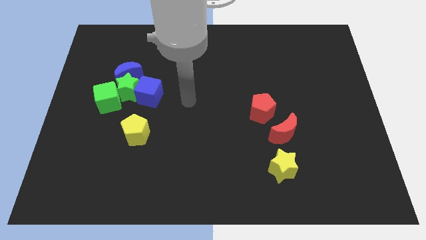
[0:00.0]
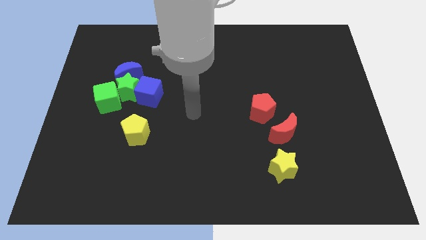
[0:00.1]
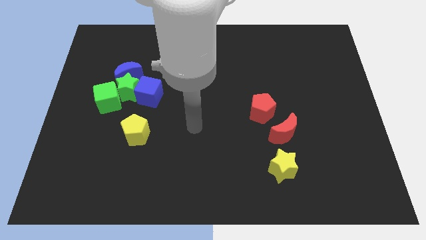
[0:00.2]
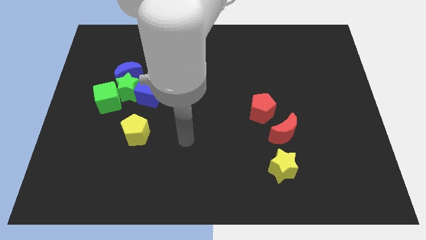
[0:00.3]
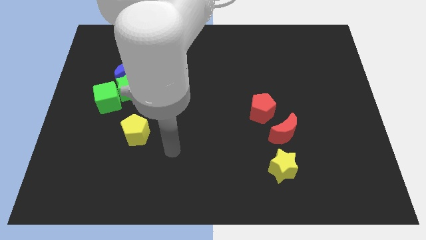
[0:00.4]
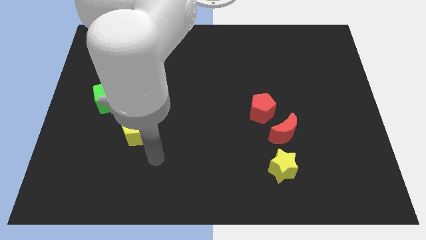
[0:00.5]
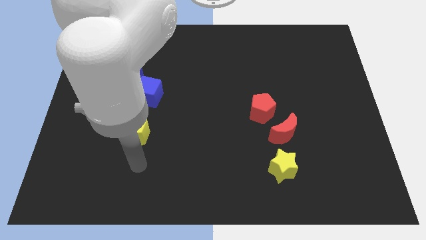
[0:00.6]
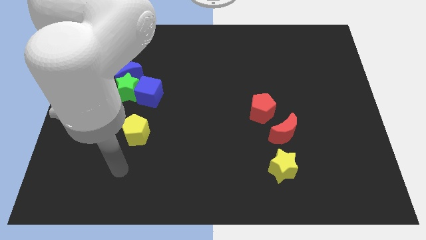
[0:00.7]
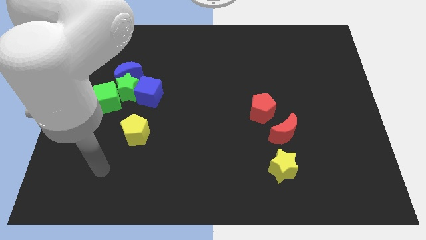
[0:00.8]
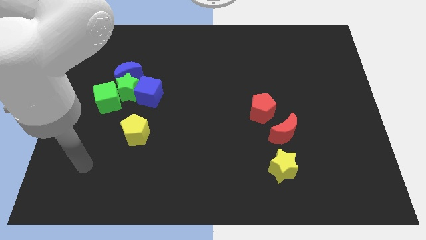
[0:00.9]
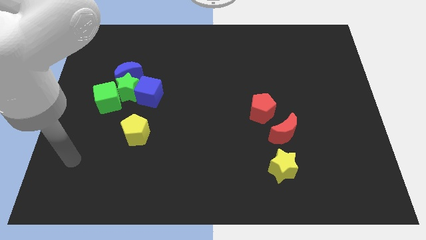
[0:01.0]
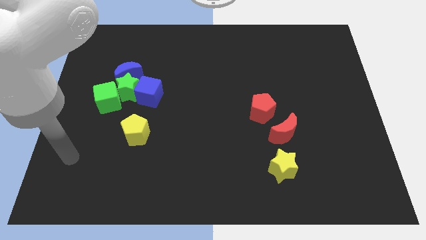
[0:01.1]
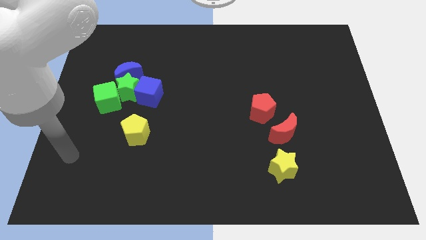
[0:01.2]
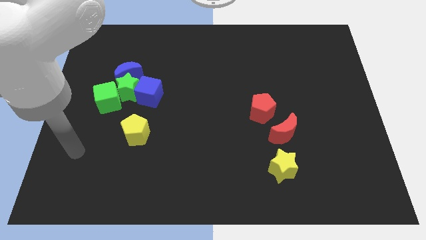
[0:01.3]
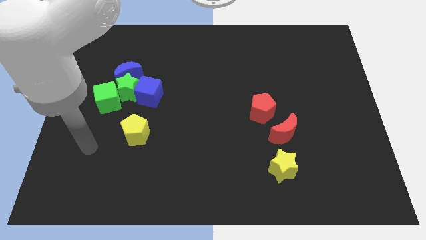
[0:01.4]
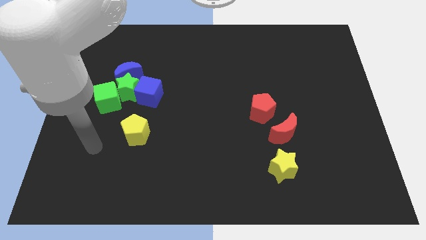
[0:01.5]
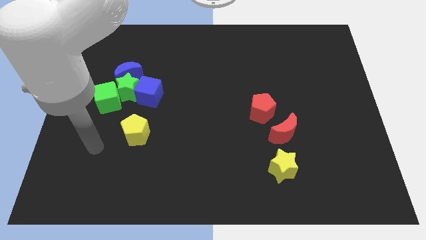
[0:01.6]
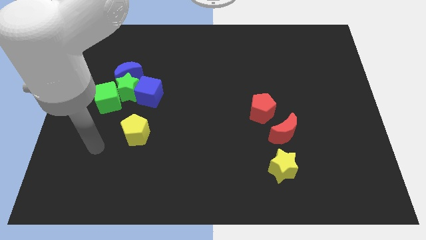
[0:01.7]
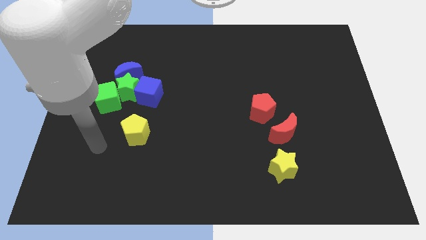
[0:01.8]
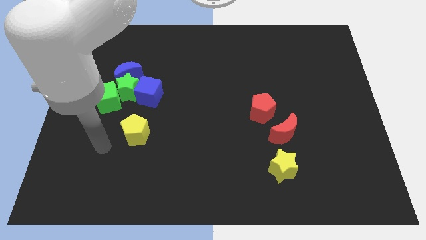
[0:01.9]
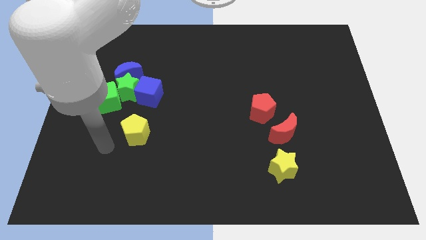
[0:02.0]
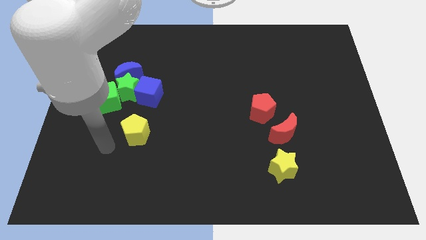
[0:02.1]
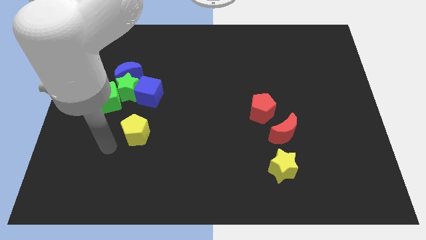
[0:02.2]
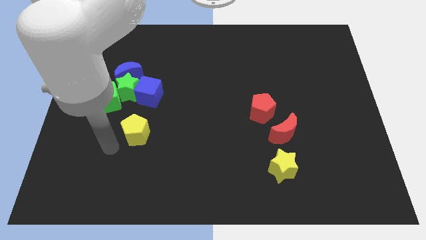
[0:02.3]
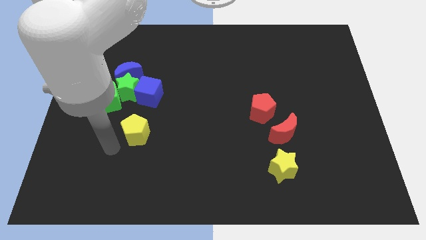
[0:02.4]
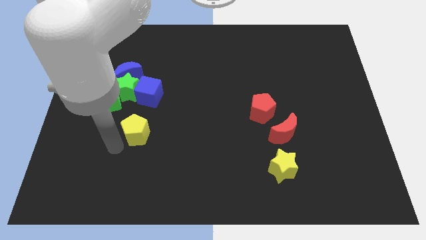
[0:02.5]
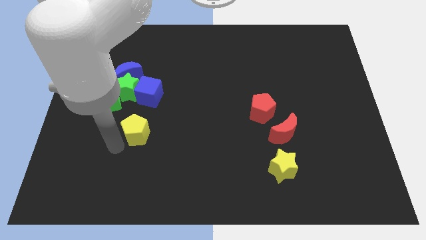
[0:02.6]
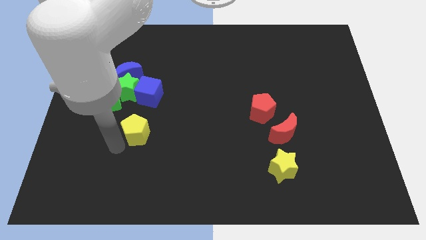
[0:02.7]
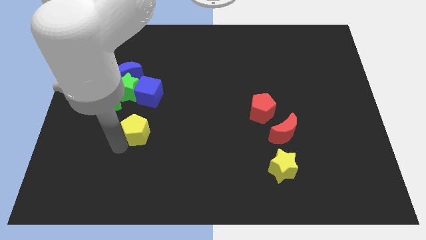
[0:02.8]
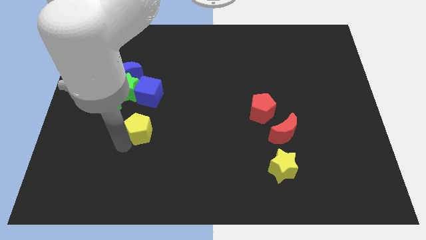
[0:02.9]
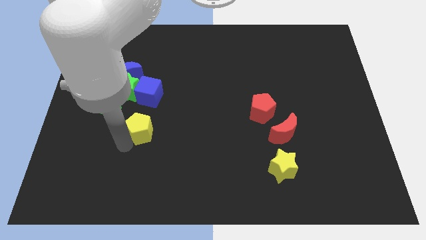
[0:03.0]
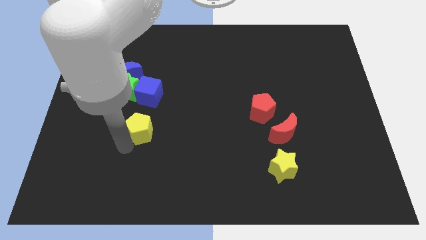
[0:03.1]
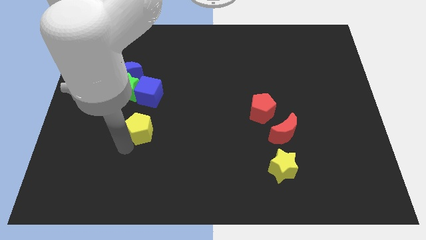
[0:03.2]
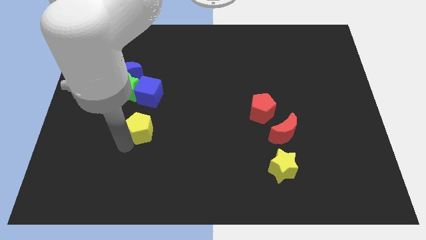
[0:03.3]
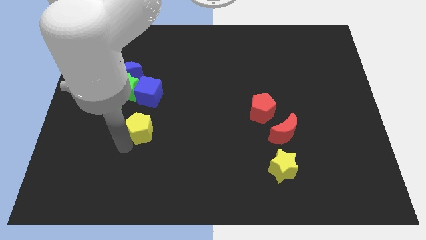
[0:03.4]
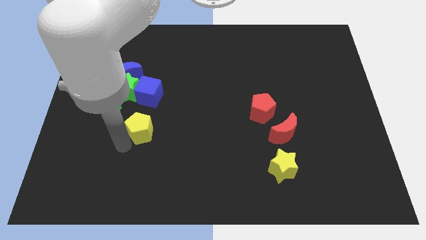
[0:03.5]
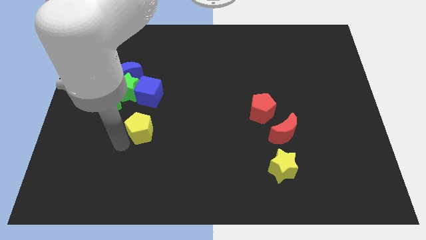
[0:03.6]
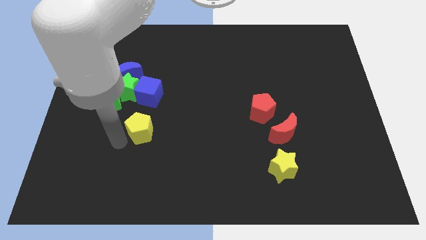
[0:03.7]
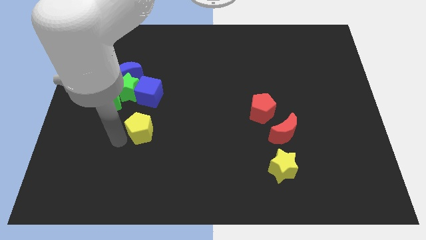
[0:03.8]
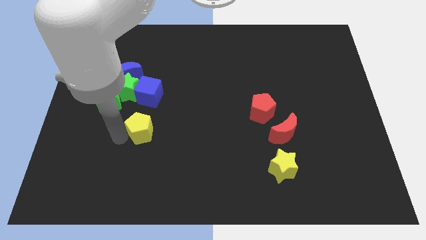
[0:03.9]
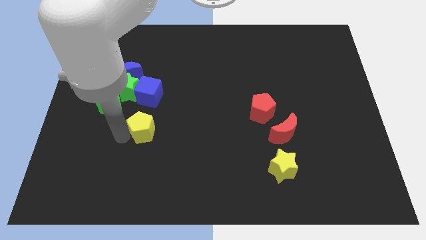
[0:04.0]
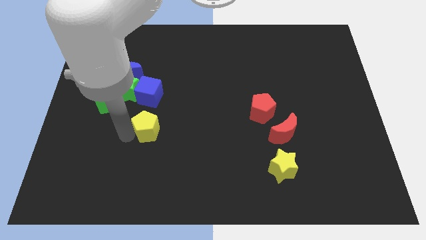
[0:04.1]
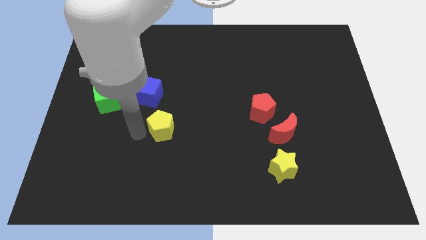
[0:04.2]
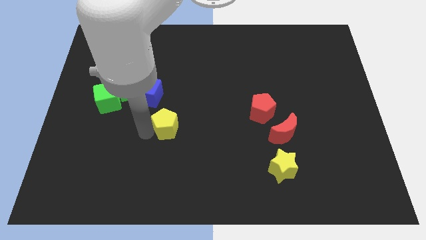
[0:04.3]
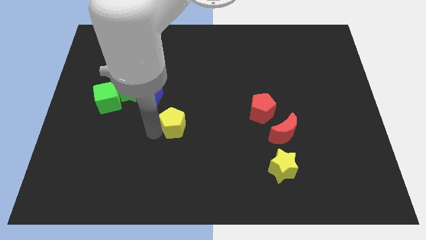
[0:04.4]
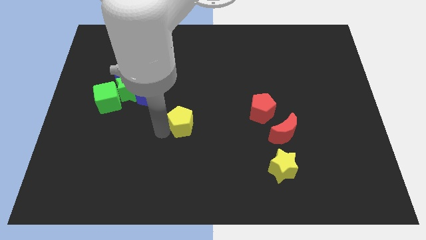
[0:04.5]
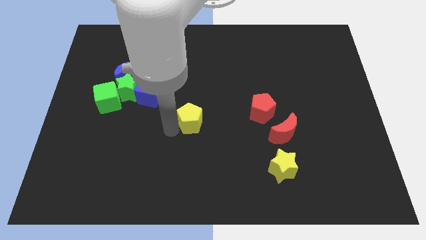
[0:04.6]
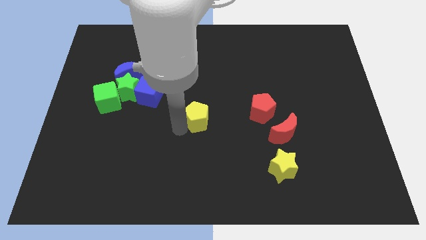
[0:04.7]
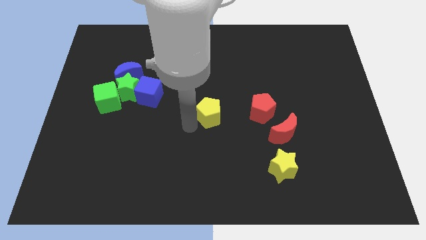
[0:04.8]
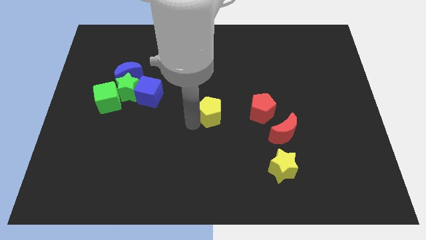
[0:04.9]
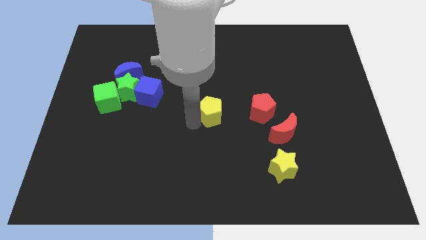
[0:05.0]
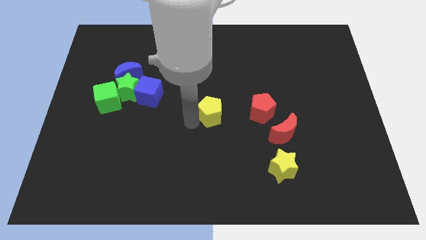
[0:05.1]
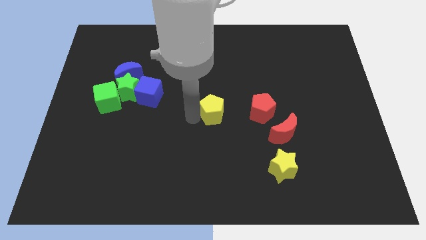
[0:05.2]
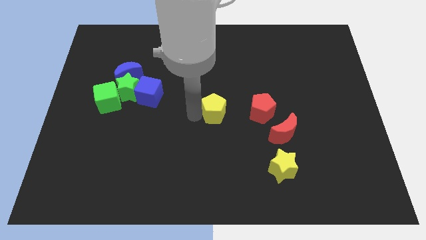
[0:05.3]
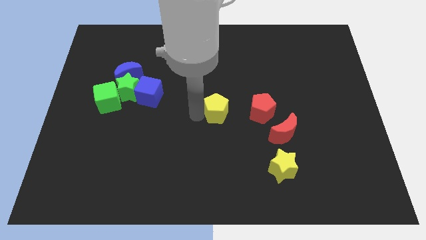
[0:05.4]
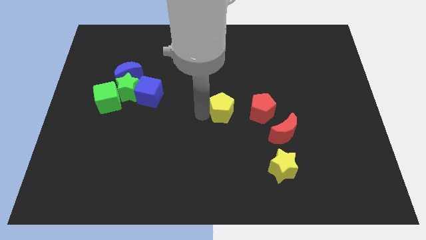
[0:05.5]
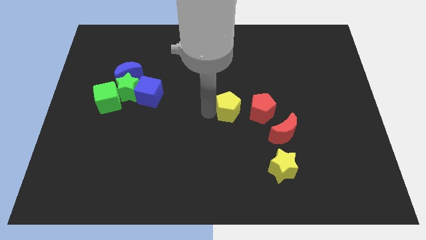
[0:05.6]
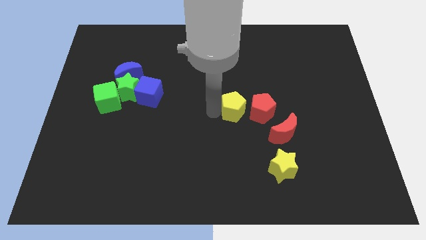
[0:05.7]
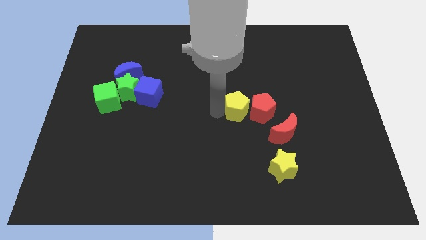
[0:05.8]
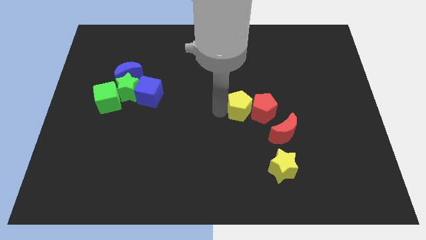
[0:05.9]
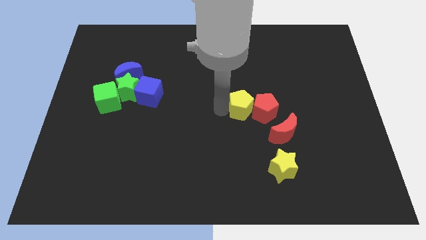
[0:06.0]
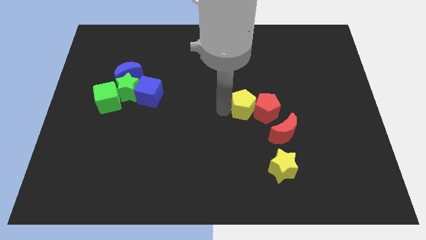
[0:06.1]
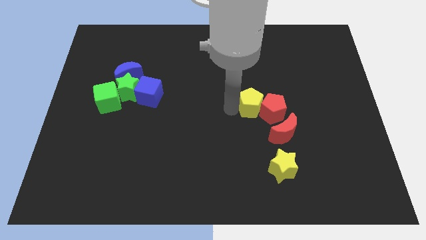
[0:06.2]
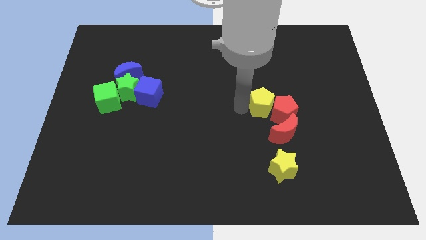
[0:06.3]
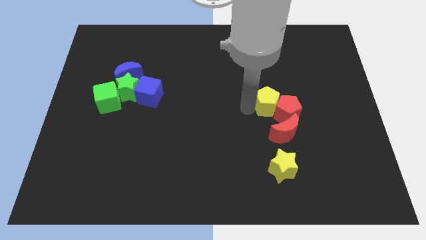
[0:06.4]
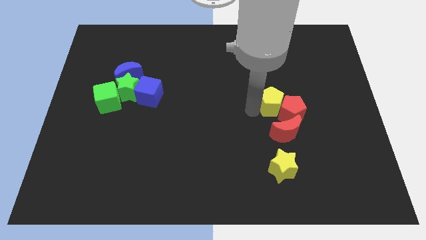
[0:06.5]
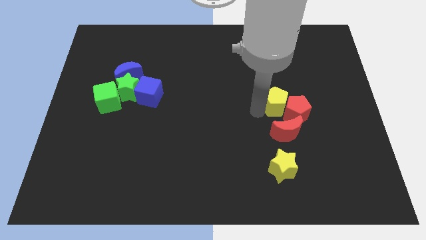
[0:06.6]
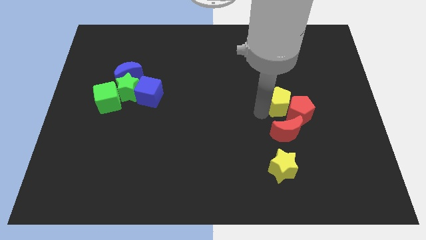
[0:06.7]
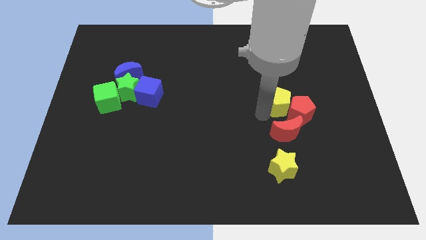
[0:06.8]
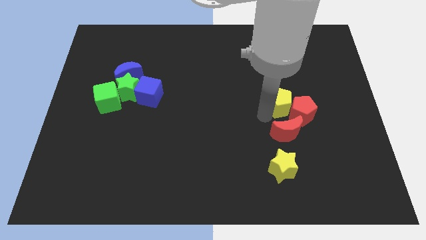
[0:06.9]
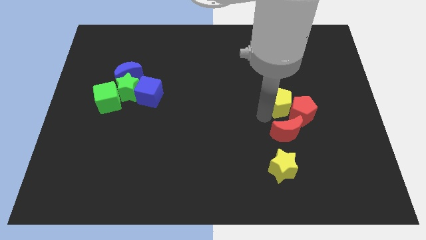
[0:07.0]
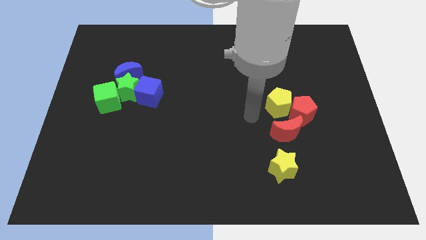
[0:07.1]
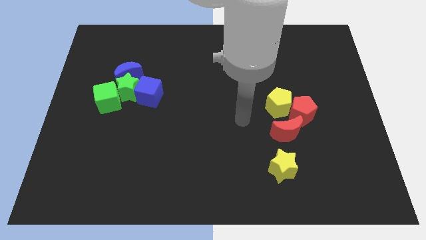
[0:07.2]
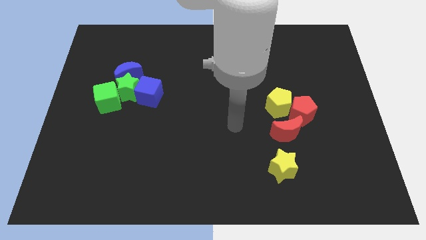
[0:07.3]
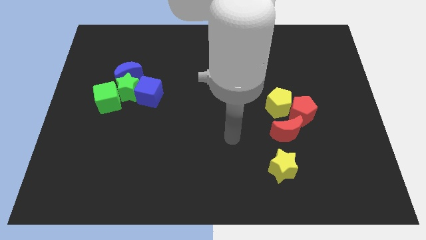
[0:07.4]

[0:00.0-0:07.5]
push the yellow pentagon towards the red blocks

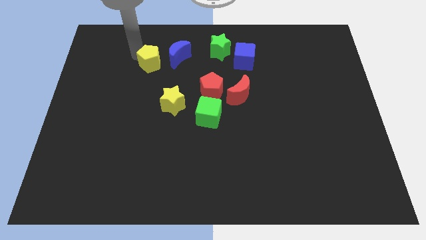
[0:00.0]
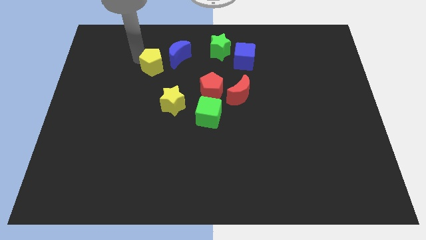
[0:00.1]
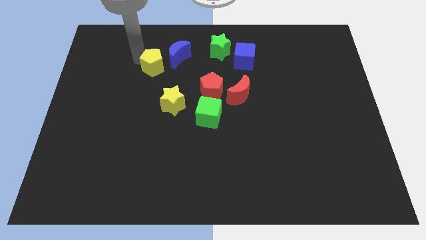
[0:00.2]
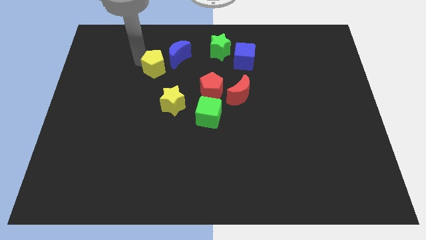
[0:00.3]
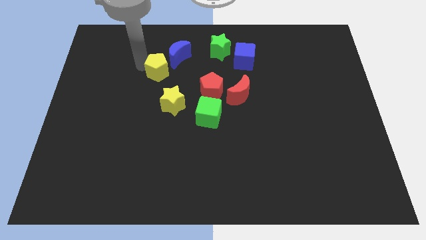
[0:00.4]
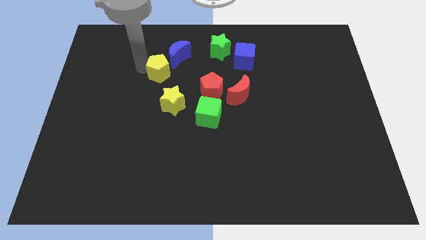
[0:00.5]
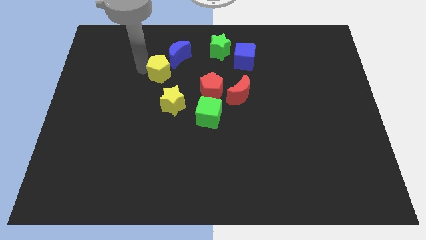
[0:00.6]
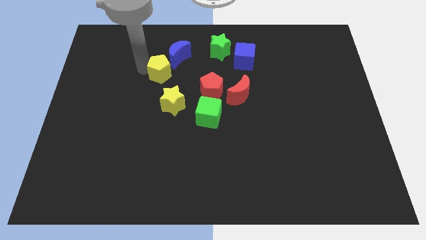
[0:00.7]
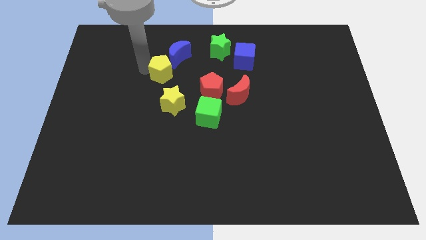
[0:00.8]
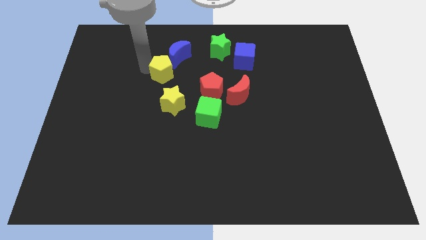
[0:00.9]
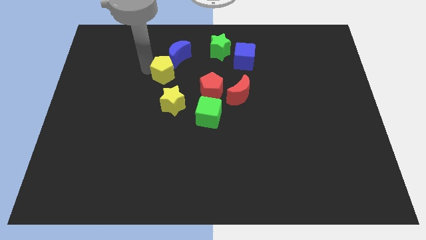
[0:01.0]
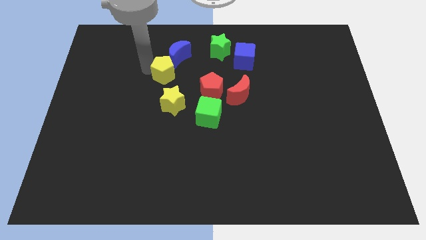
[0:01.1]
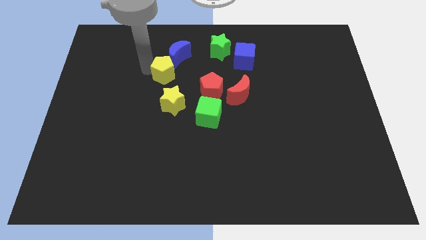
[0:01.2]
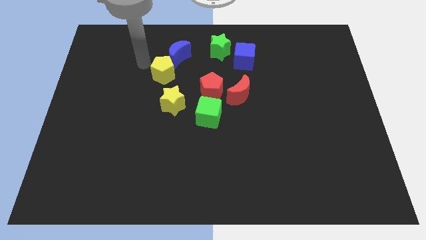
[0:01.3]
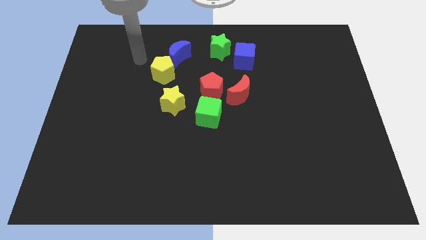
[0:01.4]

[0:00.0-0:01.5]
place the yellow pentagon above the yellow star
